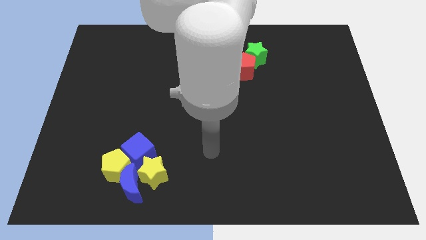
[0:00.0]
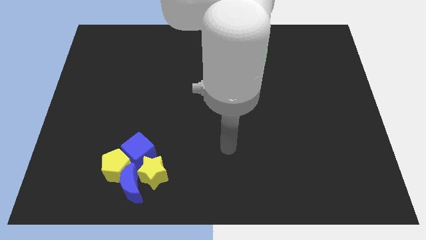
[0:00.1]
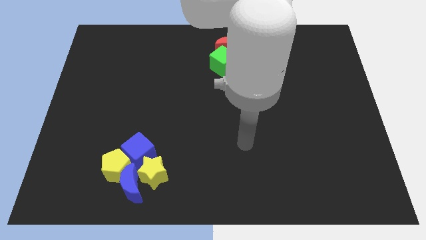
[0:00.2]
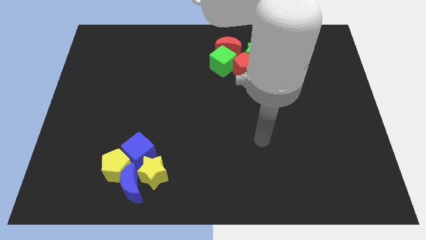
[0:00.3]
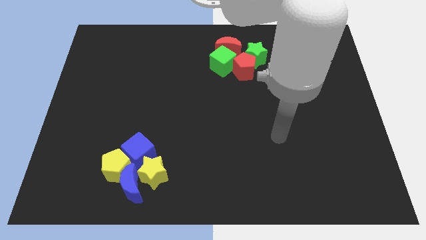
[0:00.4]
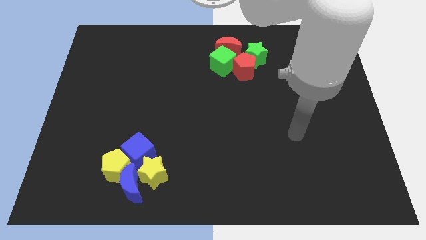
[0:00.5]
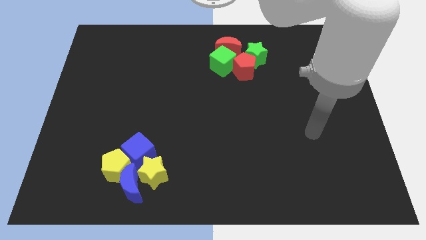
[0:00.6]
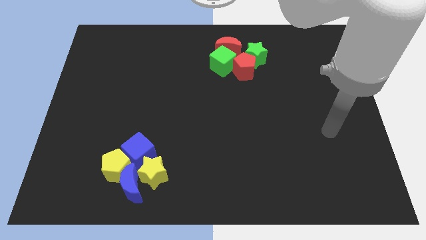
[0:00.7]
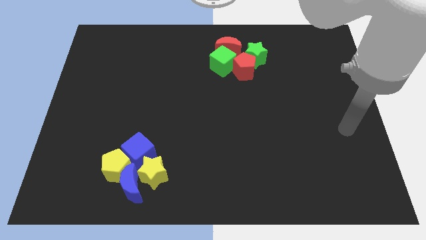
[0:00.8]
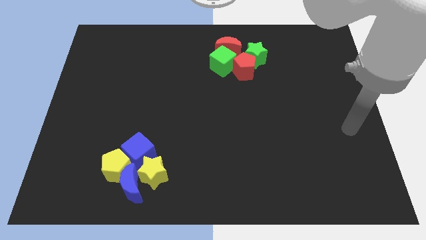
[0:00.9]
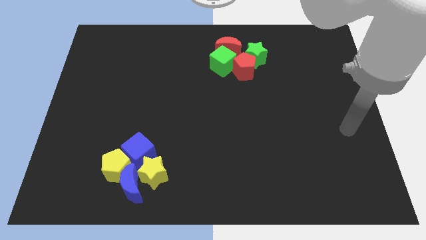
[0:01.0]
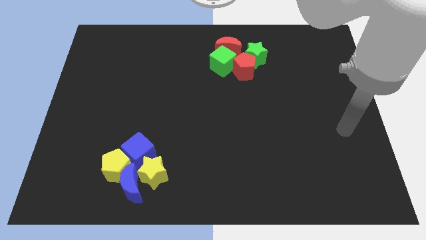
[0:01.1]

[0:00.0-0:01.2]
place your arm to right center of the board

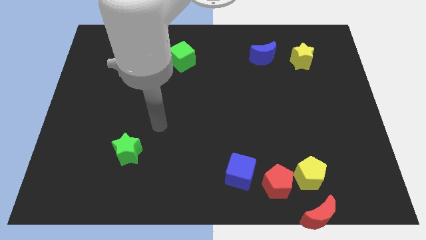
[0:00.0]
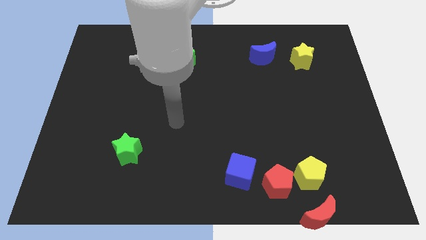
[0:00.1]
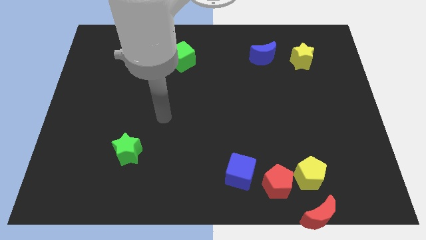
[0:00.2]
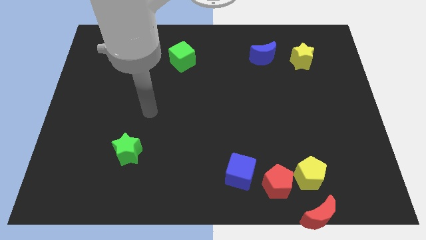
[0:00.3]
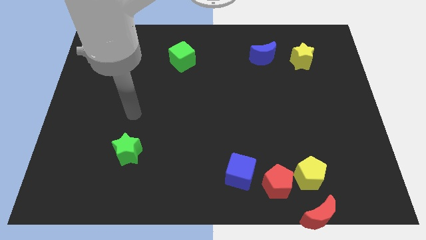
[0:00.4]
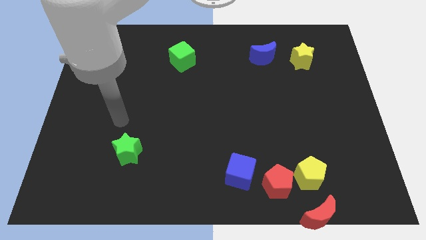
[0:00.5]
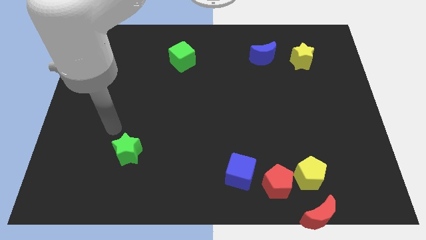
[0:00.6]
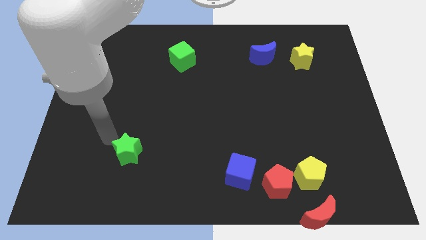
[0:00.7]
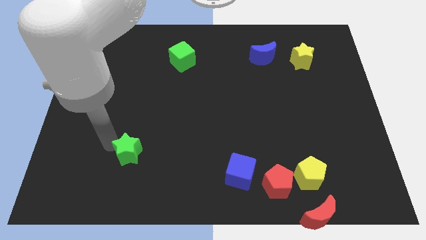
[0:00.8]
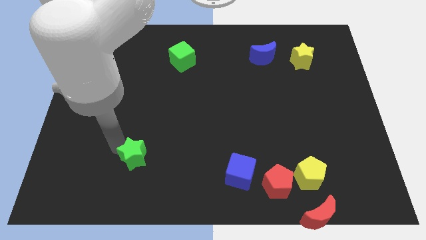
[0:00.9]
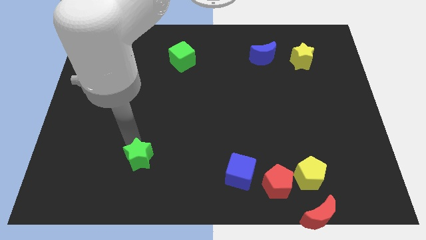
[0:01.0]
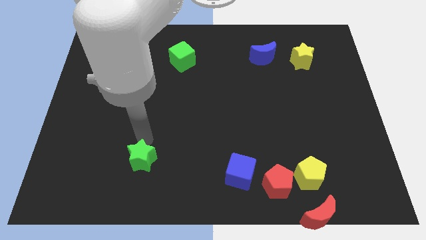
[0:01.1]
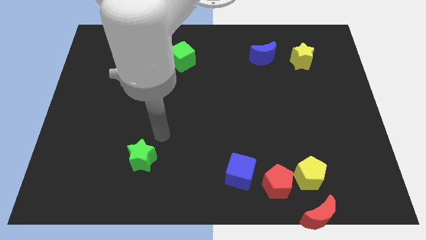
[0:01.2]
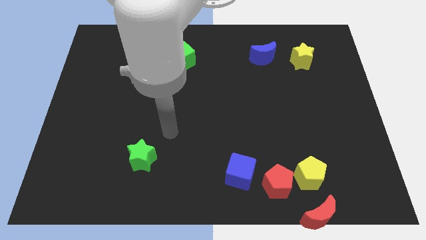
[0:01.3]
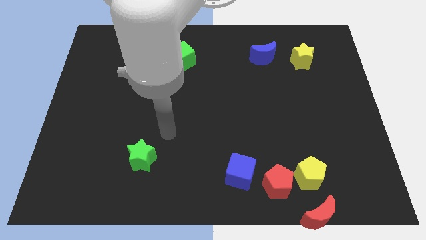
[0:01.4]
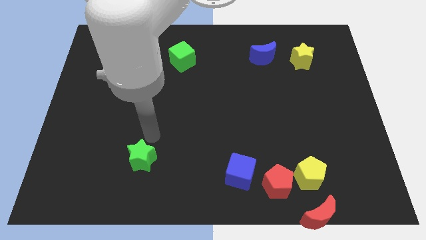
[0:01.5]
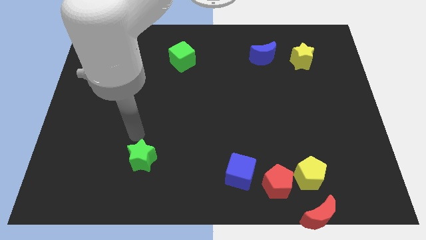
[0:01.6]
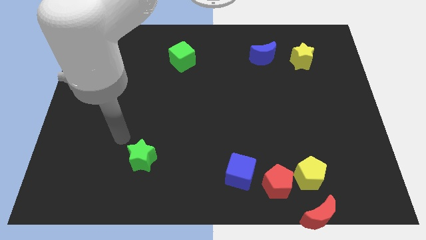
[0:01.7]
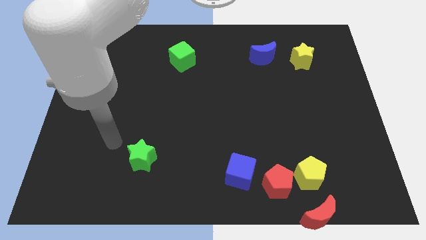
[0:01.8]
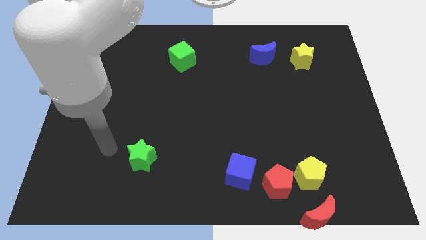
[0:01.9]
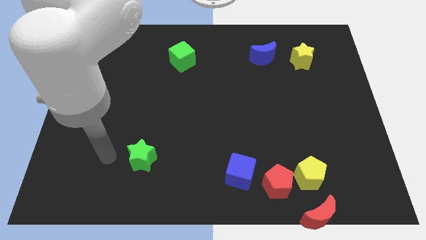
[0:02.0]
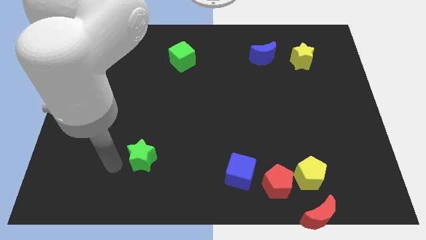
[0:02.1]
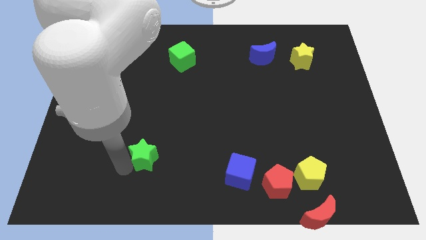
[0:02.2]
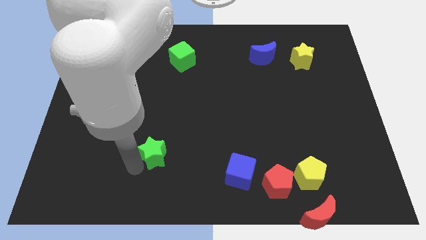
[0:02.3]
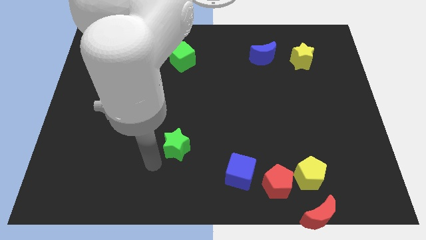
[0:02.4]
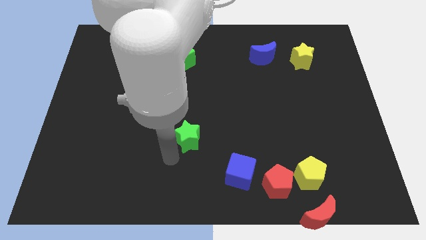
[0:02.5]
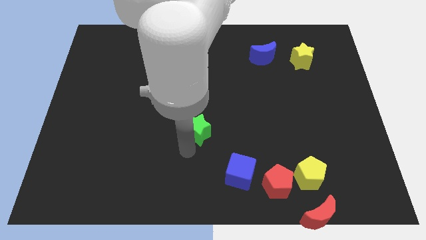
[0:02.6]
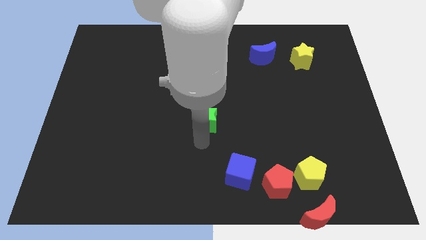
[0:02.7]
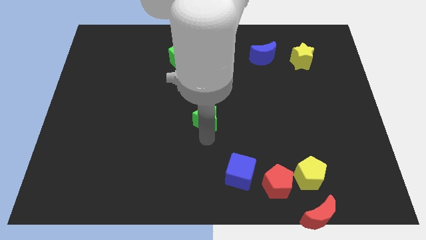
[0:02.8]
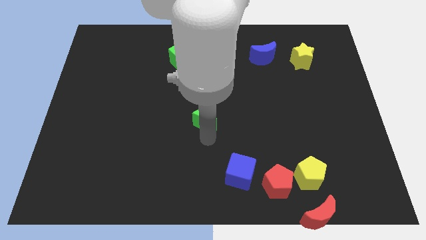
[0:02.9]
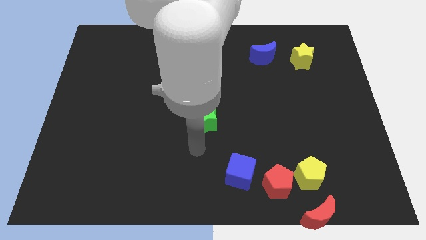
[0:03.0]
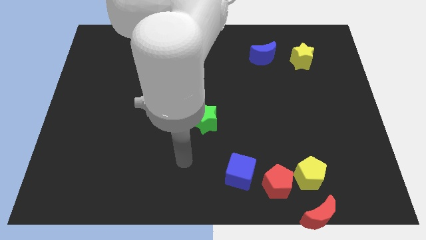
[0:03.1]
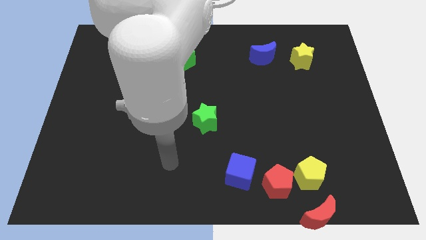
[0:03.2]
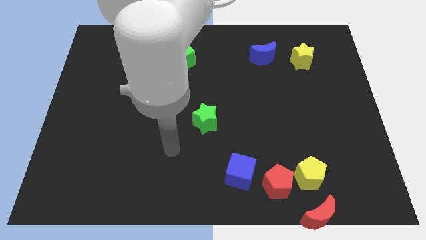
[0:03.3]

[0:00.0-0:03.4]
push the green star between the green cube and blue cube

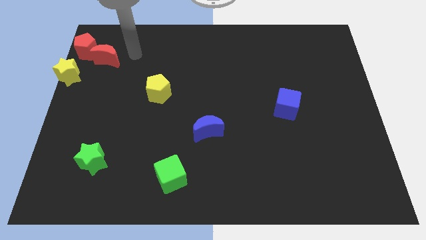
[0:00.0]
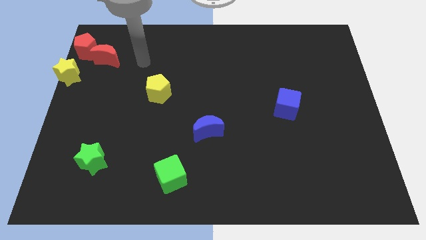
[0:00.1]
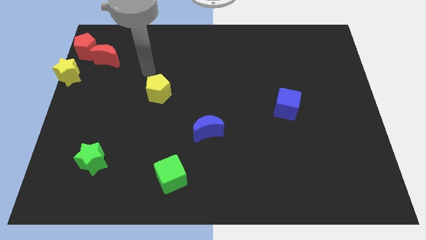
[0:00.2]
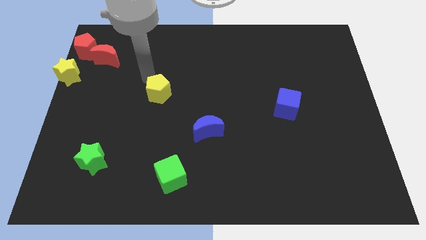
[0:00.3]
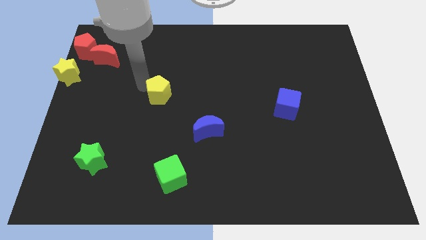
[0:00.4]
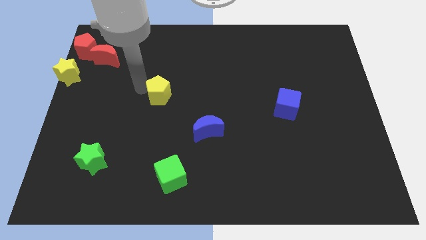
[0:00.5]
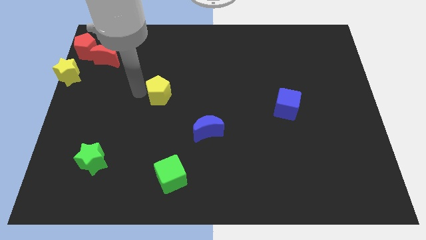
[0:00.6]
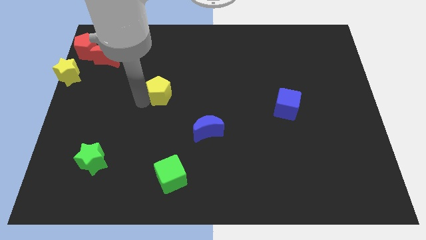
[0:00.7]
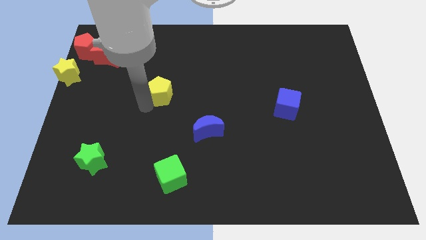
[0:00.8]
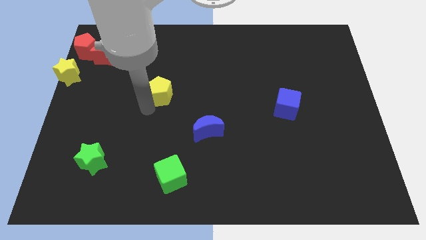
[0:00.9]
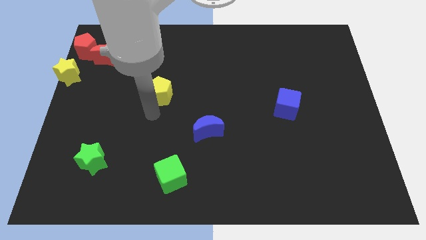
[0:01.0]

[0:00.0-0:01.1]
slightly push the yellow pentagon on the board

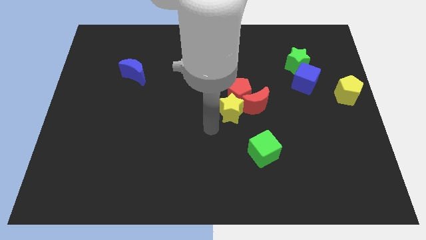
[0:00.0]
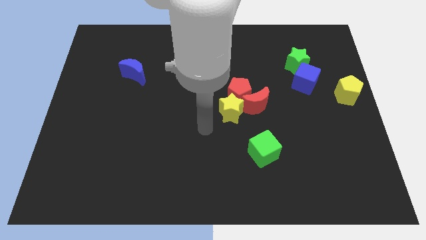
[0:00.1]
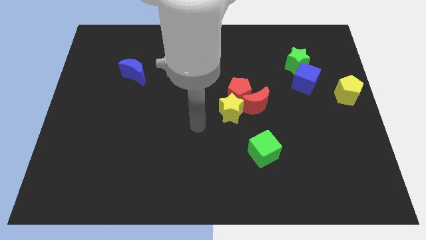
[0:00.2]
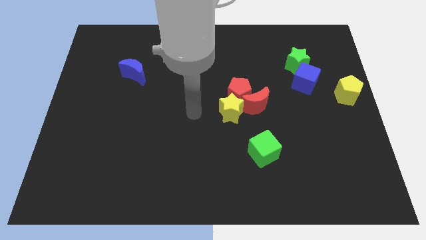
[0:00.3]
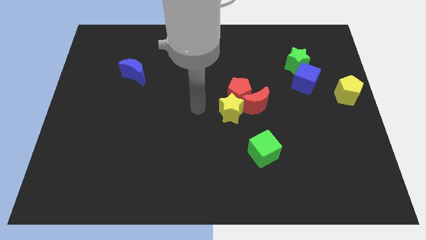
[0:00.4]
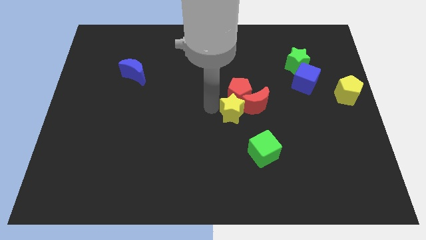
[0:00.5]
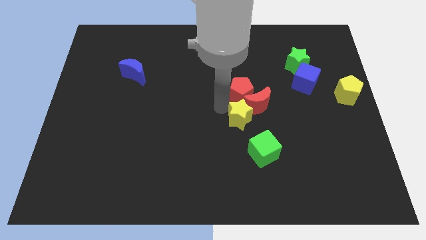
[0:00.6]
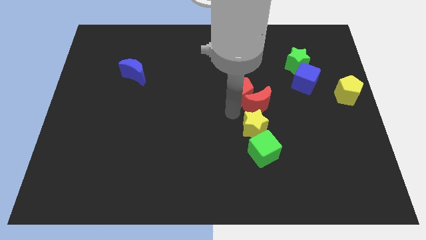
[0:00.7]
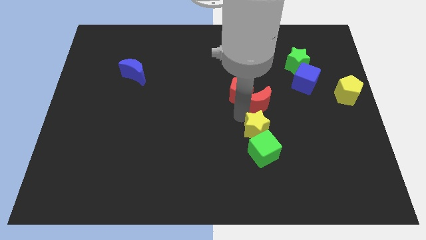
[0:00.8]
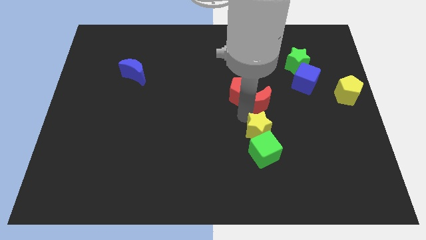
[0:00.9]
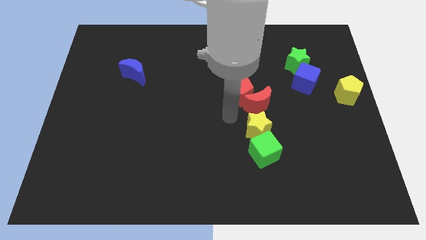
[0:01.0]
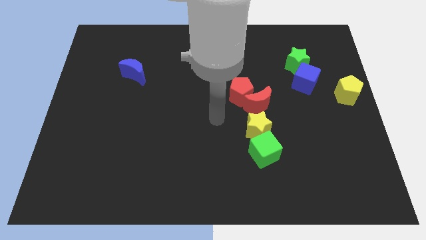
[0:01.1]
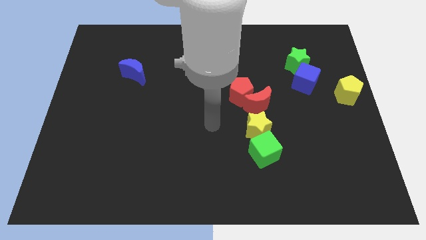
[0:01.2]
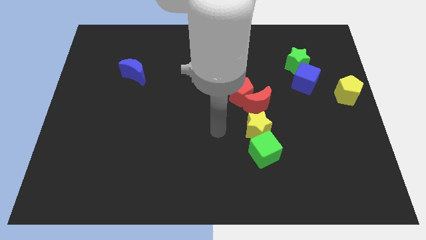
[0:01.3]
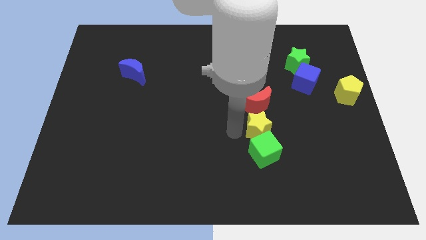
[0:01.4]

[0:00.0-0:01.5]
place the yellow star in between red crescent and green cube

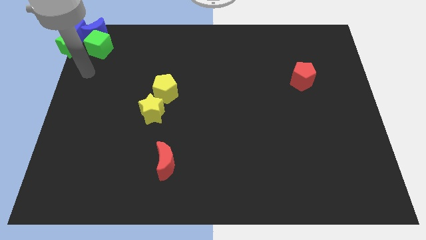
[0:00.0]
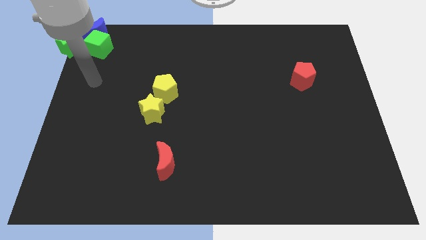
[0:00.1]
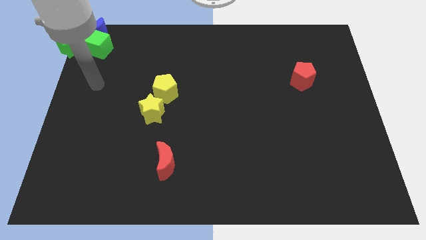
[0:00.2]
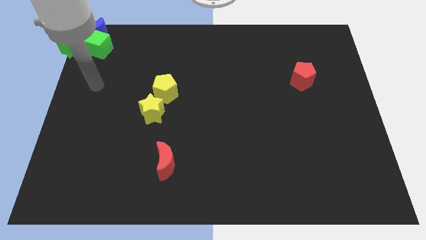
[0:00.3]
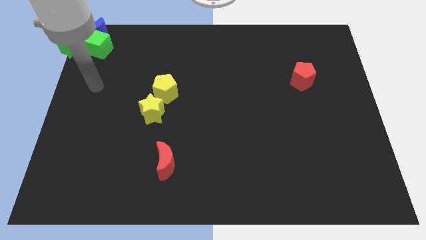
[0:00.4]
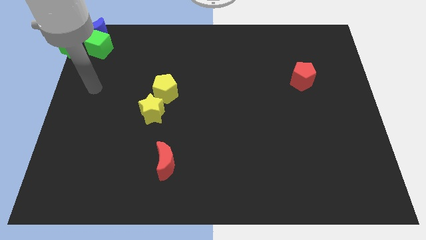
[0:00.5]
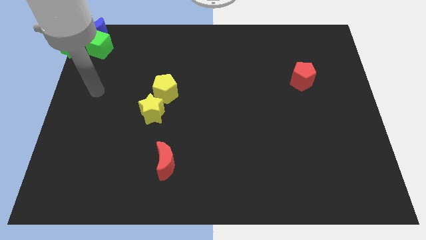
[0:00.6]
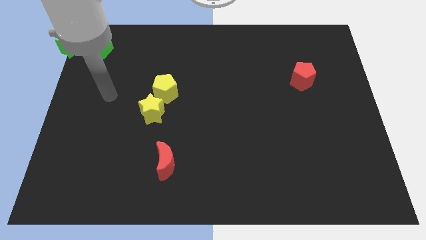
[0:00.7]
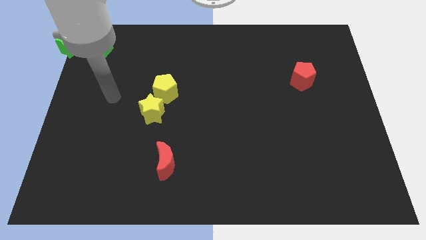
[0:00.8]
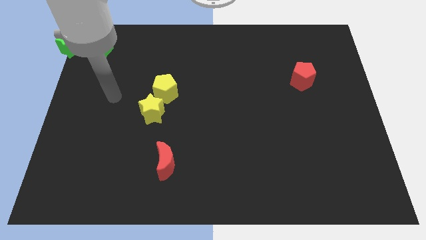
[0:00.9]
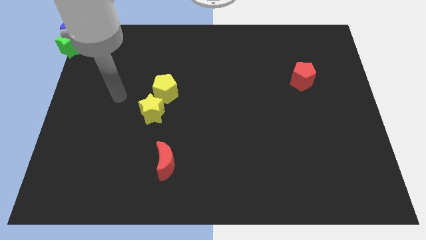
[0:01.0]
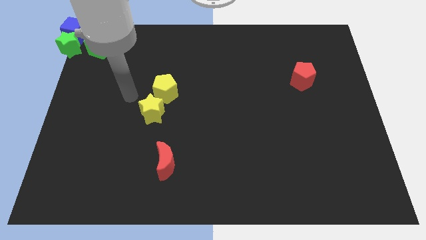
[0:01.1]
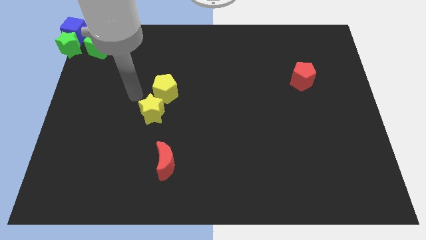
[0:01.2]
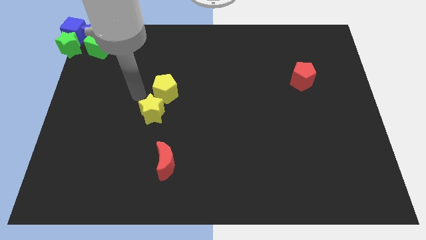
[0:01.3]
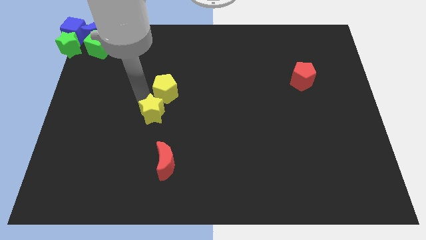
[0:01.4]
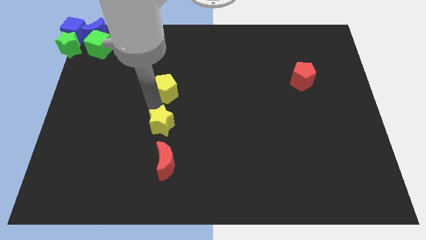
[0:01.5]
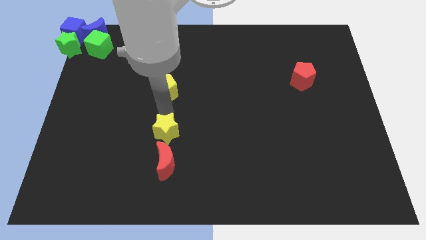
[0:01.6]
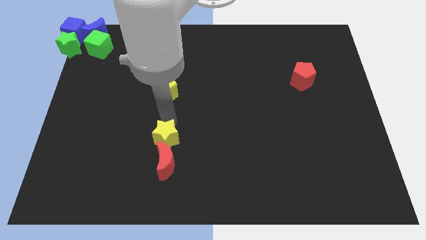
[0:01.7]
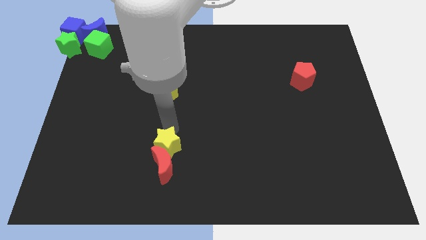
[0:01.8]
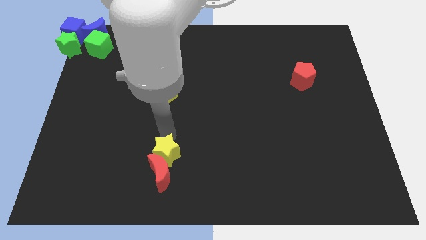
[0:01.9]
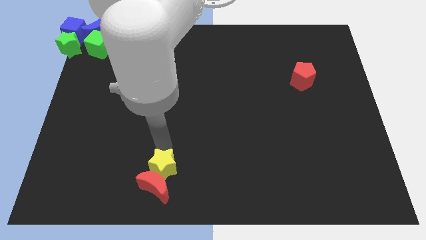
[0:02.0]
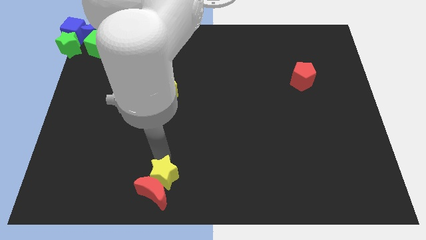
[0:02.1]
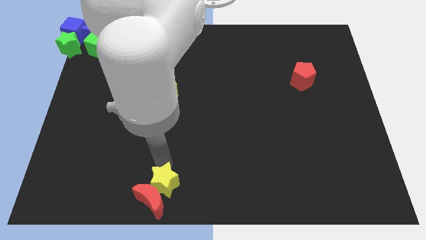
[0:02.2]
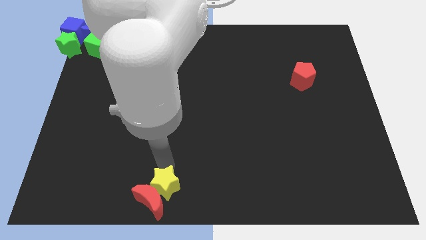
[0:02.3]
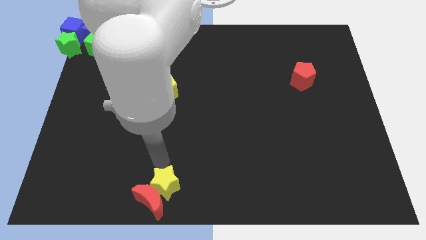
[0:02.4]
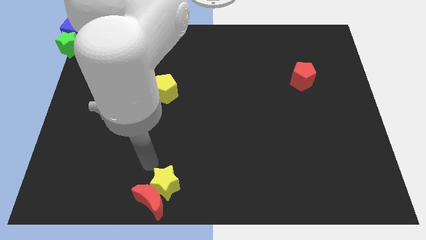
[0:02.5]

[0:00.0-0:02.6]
push the red moon with the yellow star towards the bottom center of the board
